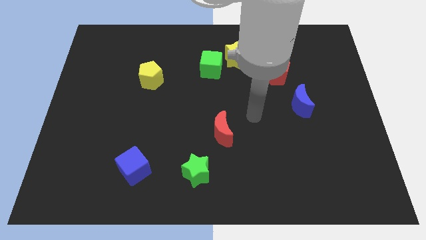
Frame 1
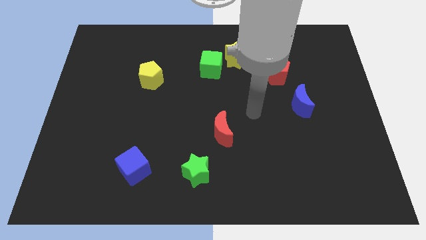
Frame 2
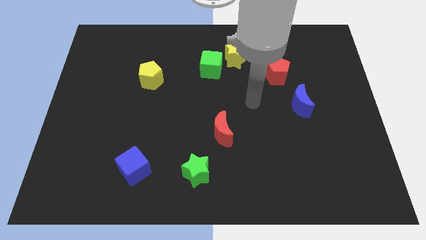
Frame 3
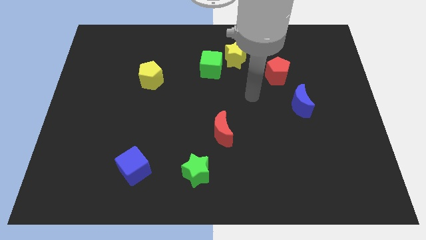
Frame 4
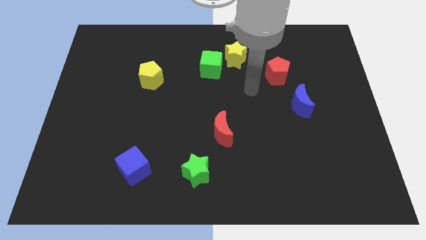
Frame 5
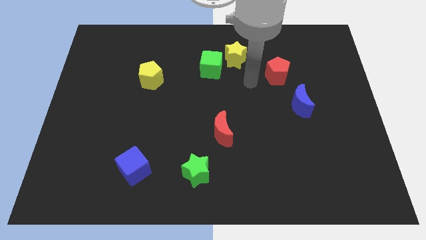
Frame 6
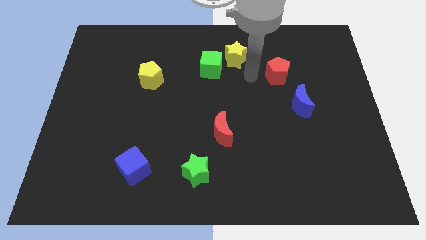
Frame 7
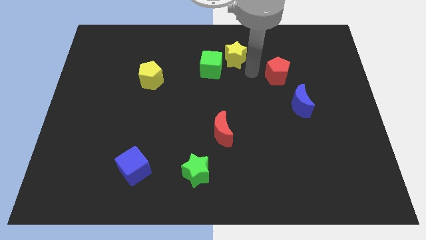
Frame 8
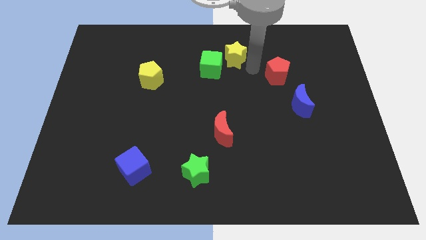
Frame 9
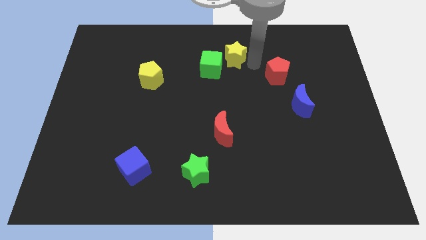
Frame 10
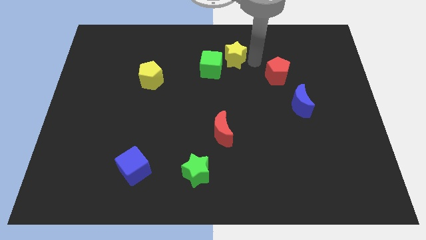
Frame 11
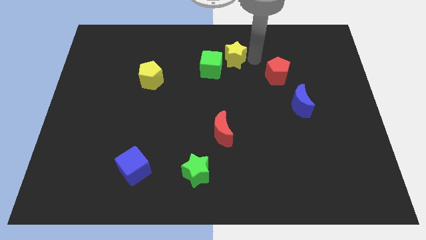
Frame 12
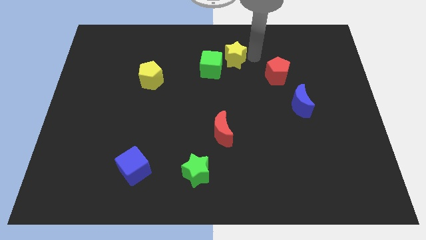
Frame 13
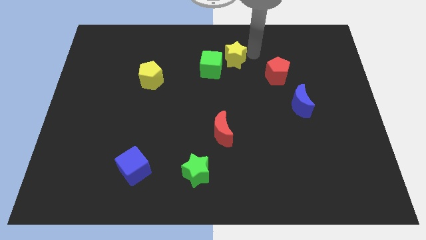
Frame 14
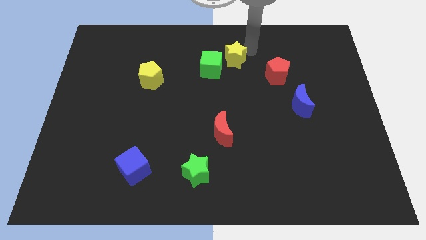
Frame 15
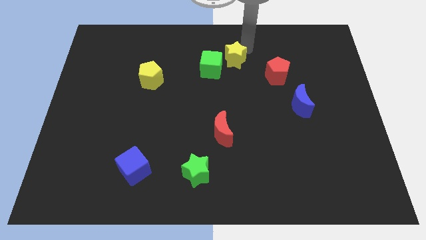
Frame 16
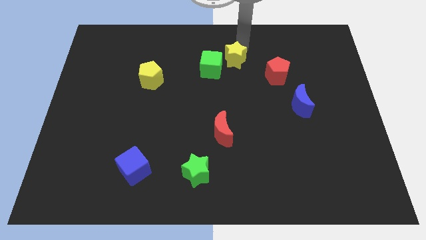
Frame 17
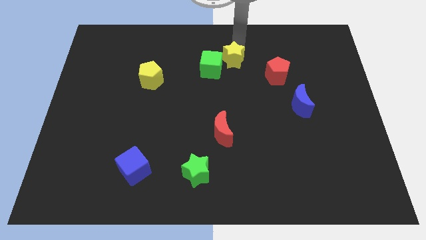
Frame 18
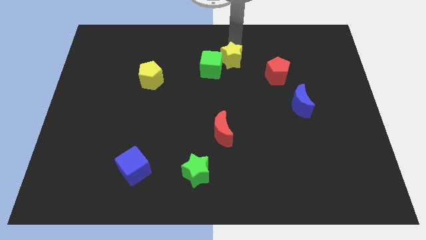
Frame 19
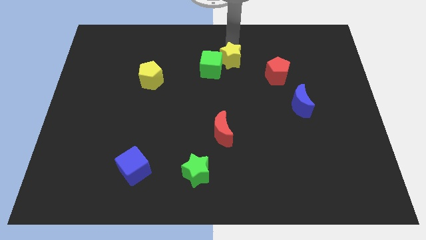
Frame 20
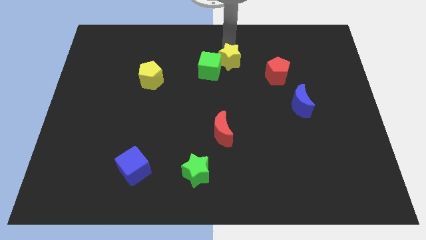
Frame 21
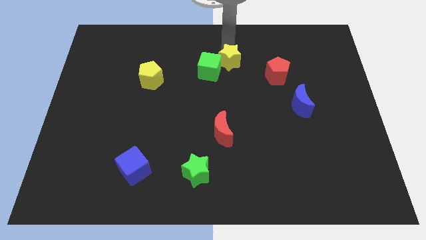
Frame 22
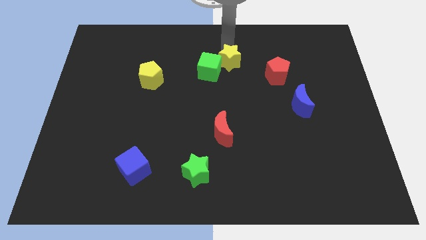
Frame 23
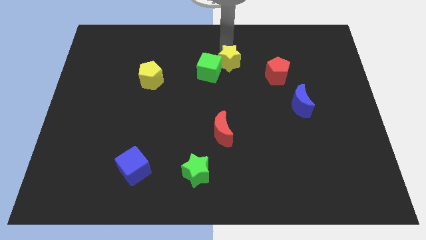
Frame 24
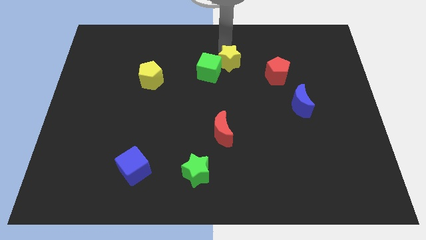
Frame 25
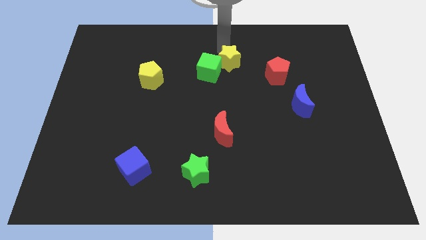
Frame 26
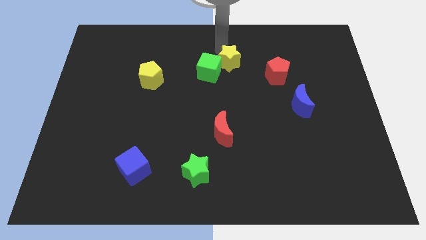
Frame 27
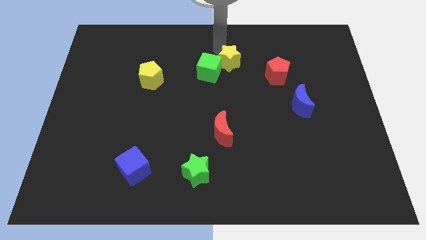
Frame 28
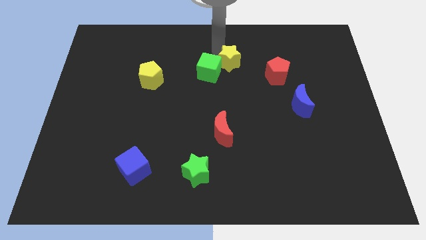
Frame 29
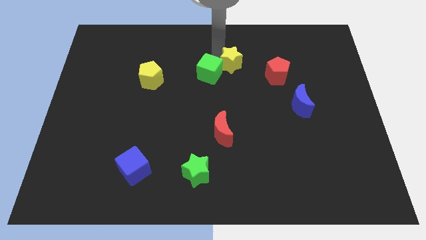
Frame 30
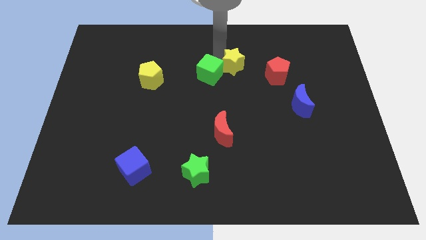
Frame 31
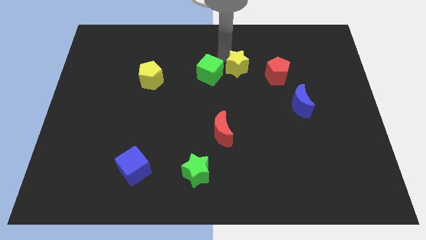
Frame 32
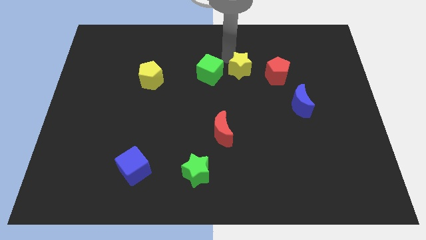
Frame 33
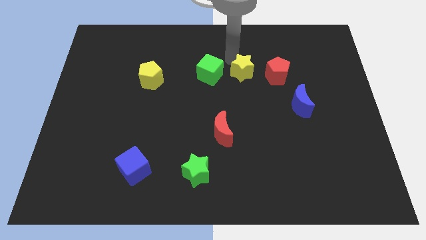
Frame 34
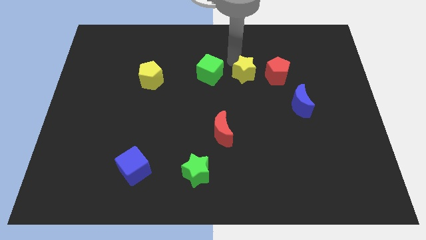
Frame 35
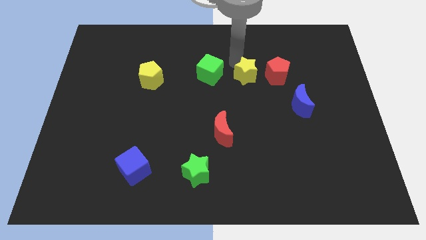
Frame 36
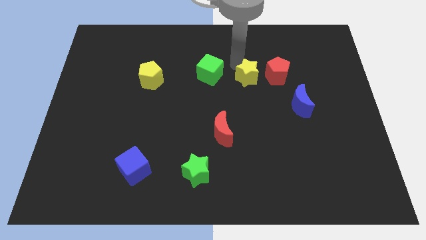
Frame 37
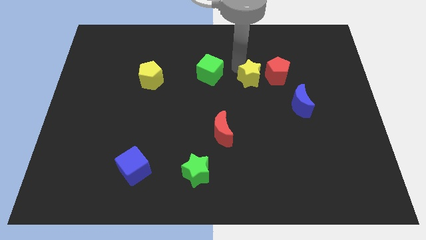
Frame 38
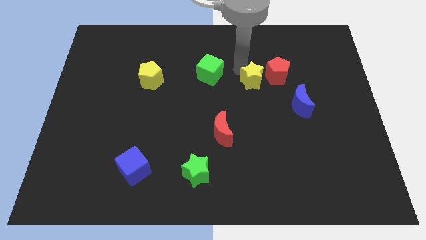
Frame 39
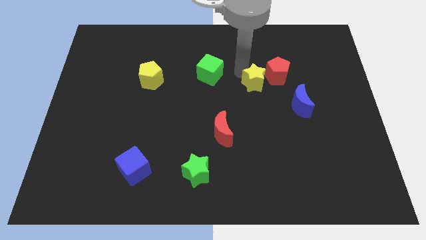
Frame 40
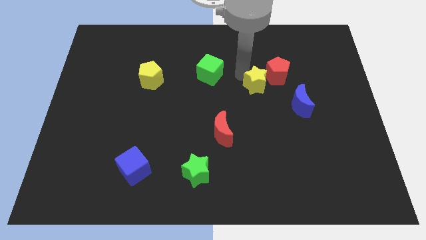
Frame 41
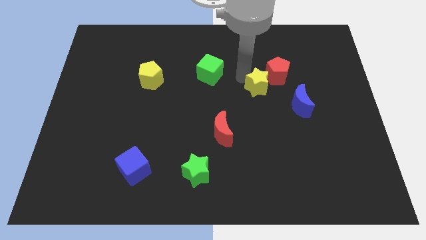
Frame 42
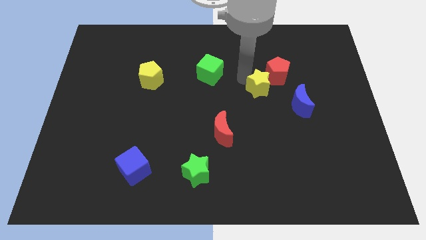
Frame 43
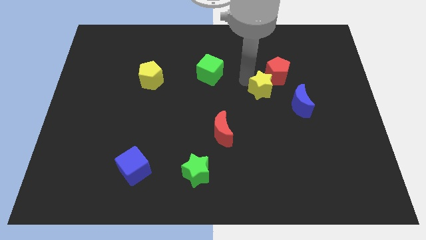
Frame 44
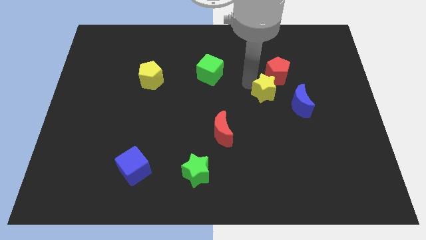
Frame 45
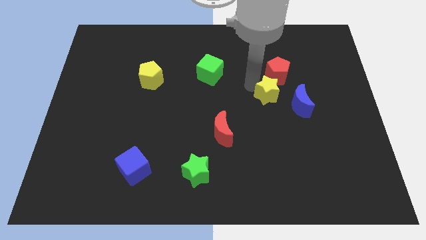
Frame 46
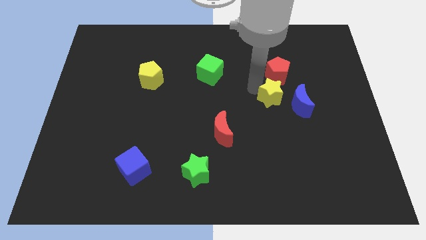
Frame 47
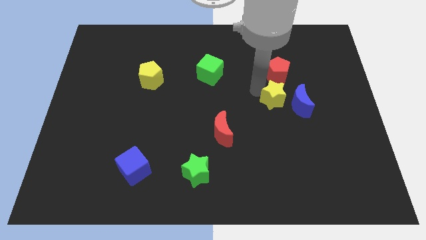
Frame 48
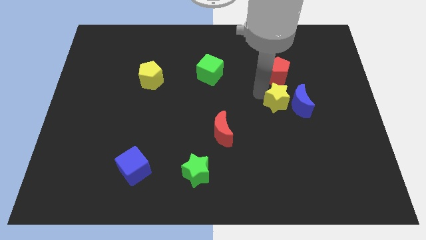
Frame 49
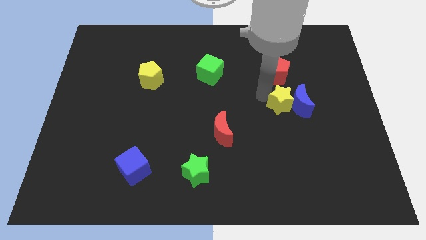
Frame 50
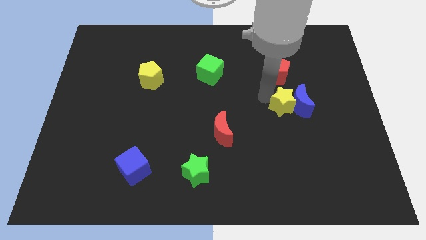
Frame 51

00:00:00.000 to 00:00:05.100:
move the yellow star to the blue moon

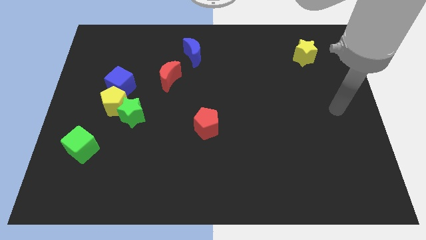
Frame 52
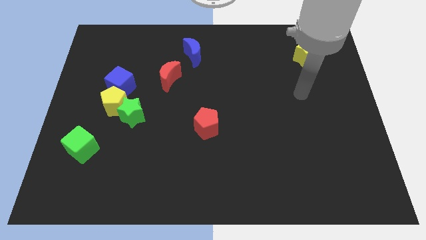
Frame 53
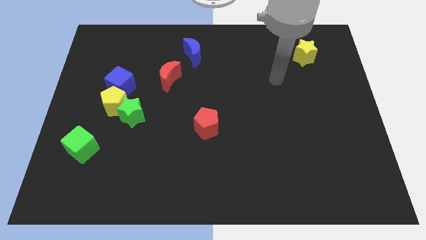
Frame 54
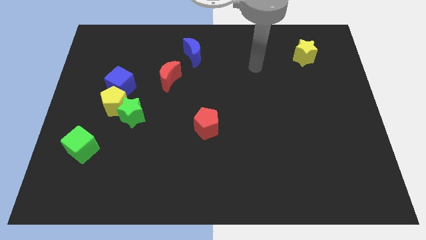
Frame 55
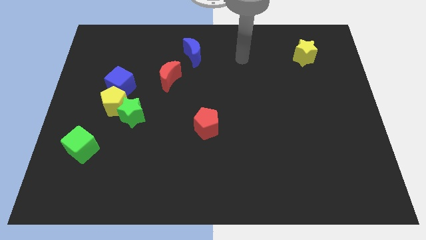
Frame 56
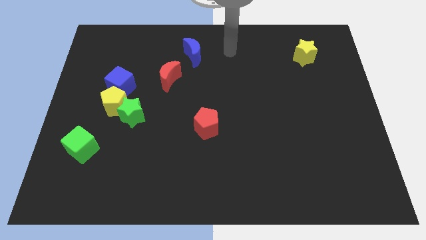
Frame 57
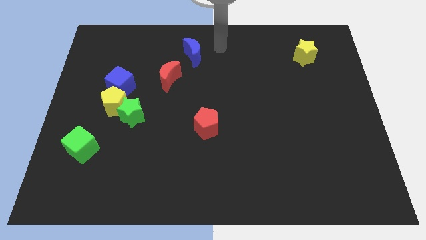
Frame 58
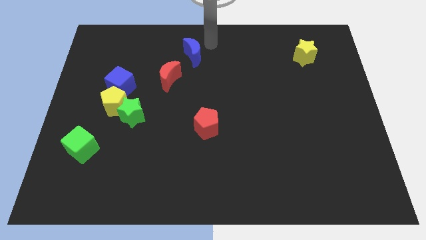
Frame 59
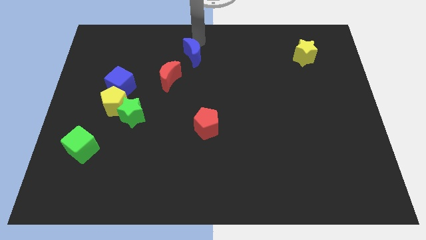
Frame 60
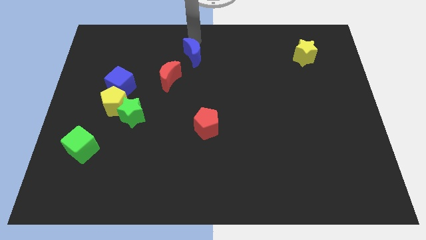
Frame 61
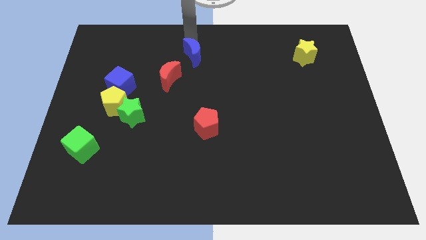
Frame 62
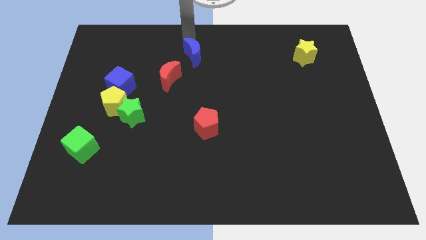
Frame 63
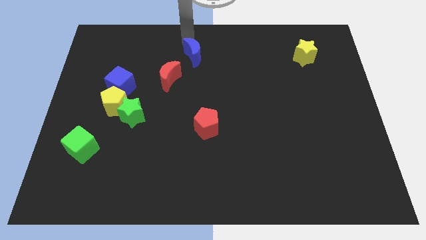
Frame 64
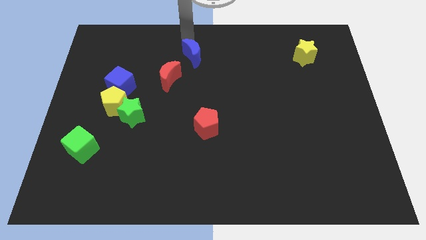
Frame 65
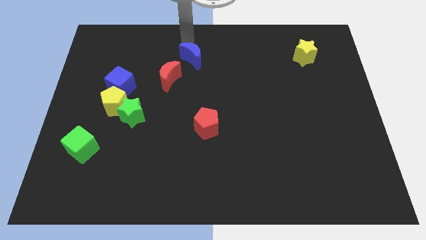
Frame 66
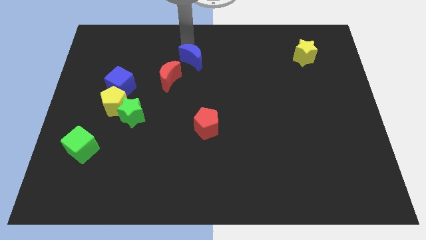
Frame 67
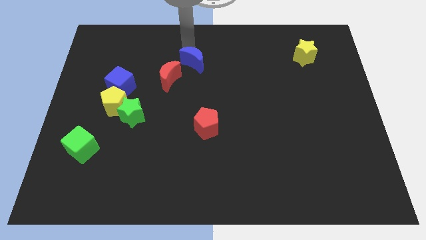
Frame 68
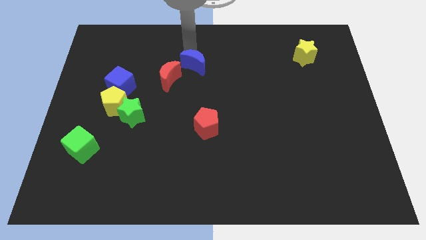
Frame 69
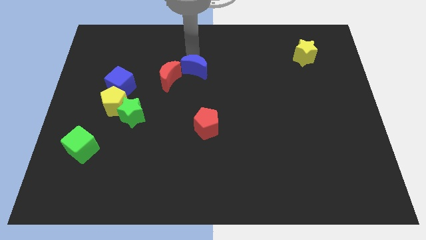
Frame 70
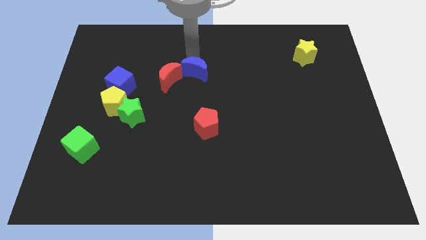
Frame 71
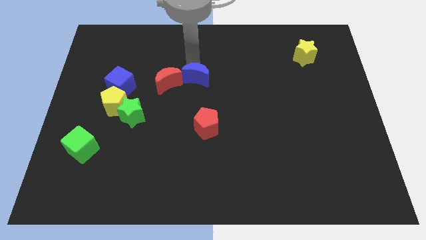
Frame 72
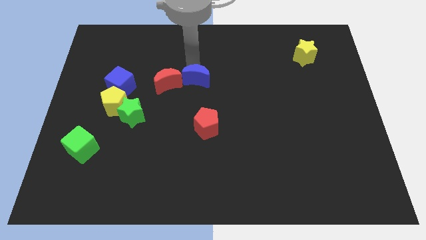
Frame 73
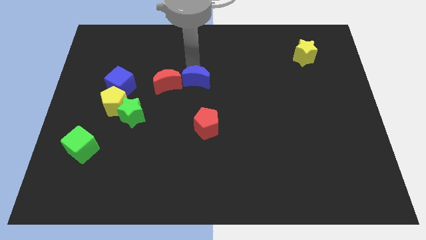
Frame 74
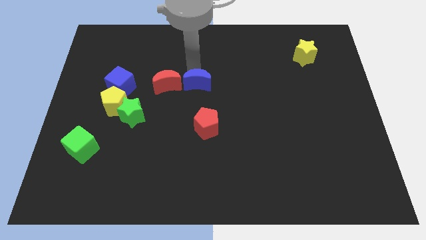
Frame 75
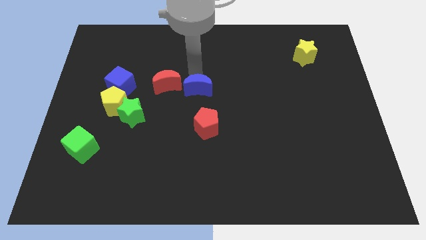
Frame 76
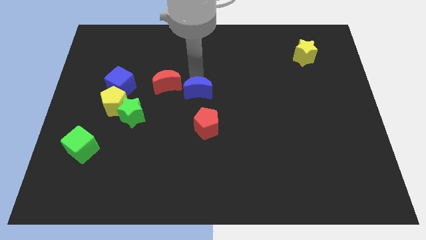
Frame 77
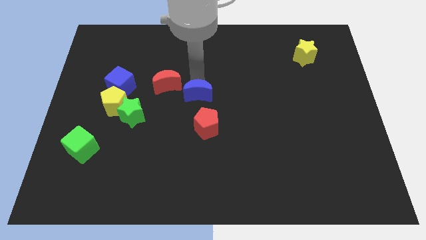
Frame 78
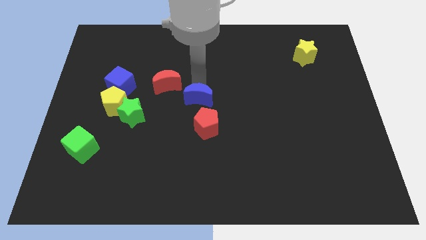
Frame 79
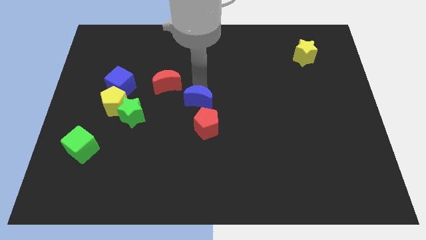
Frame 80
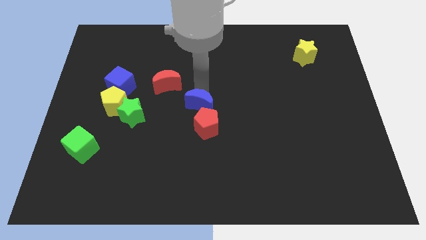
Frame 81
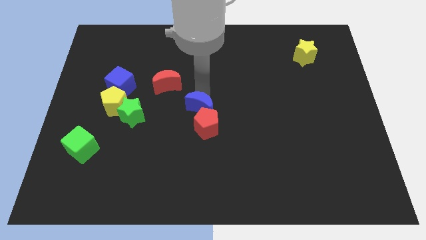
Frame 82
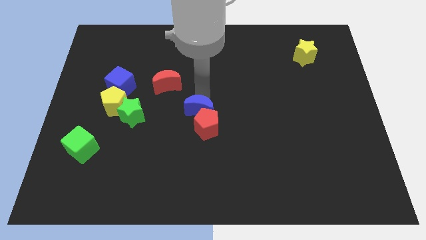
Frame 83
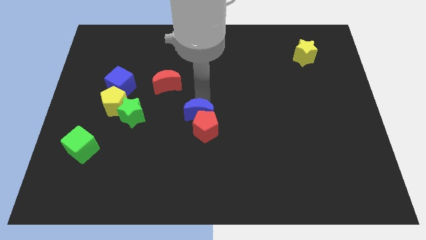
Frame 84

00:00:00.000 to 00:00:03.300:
put the blue moon next to the red pentagon
